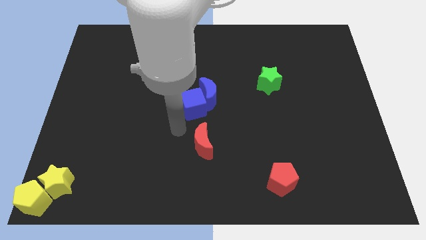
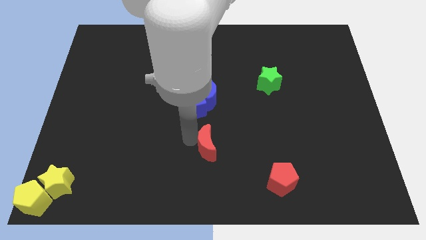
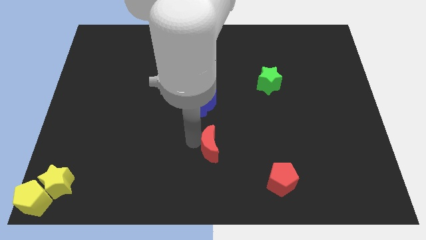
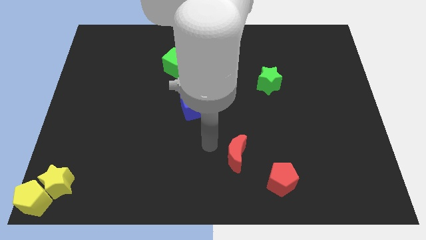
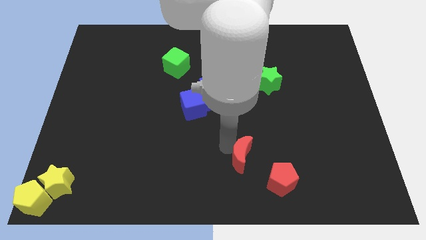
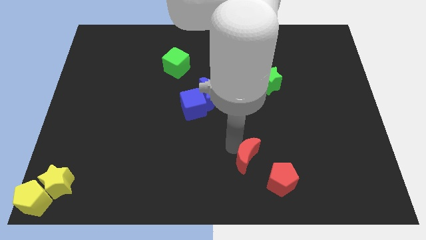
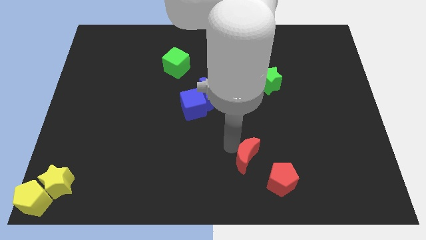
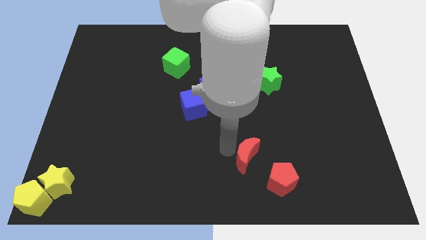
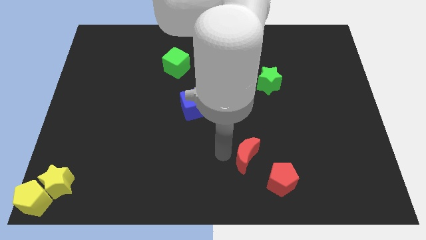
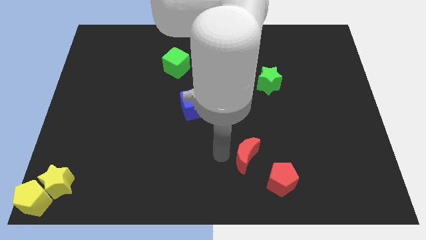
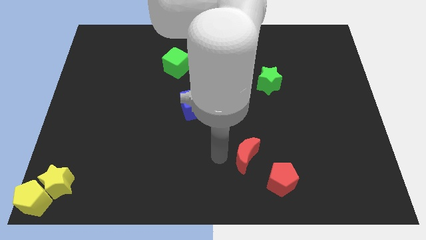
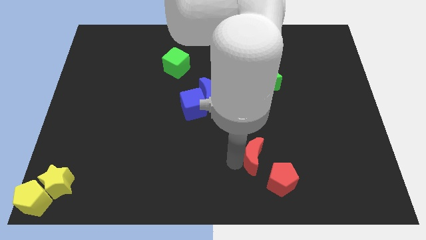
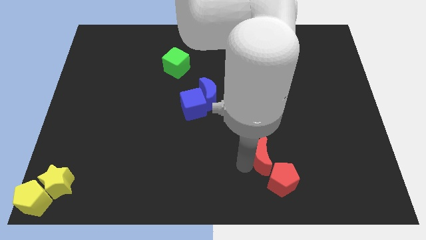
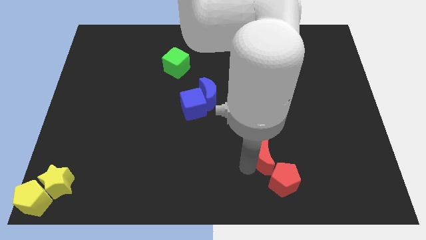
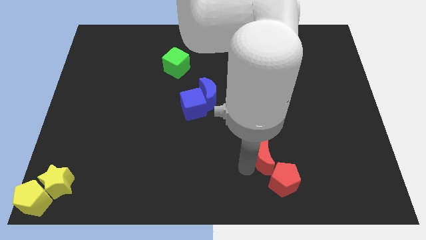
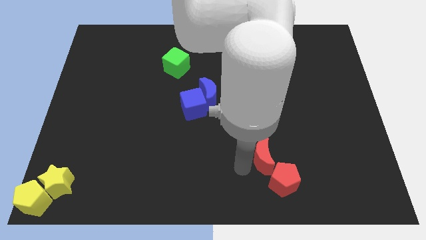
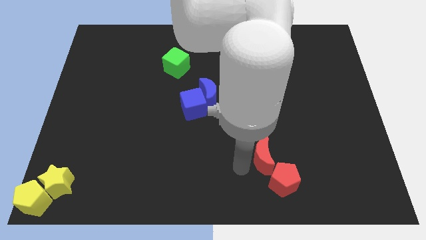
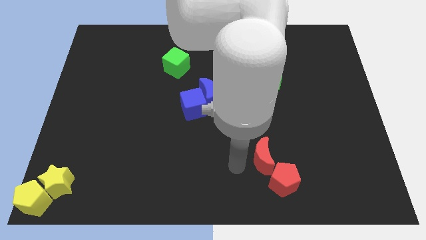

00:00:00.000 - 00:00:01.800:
push the red crescent into the red pentagon

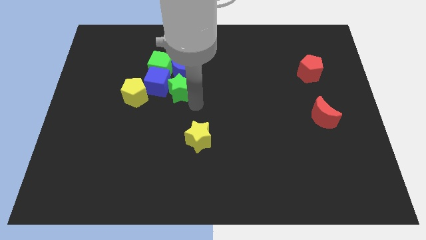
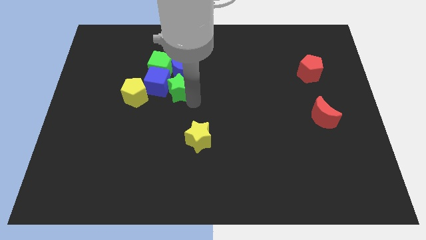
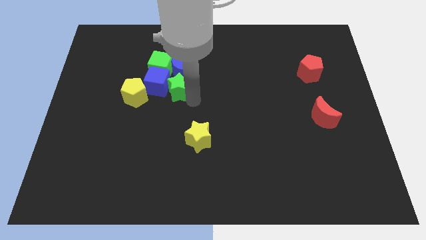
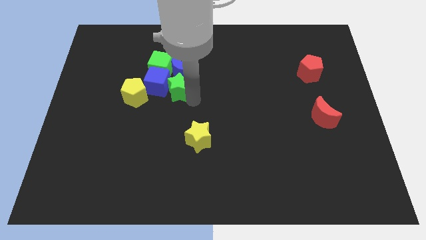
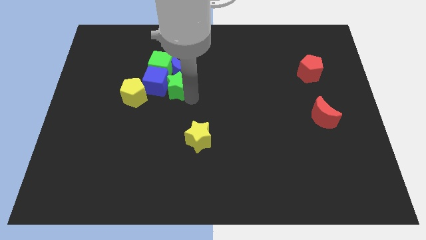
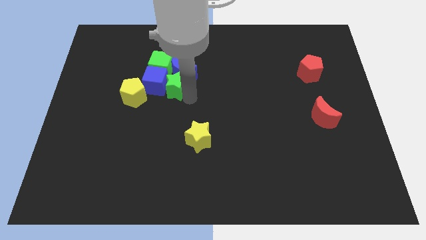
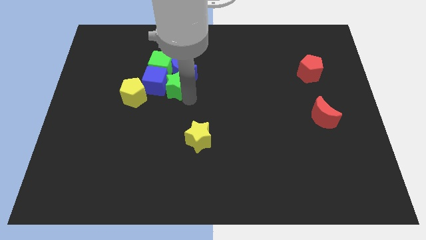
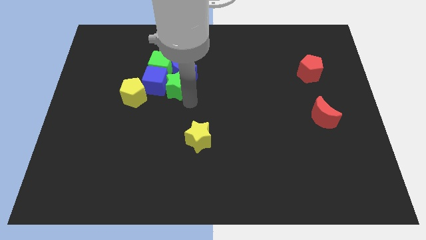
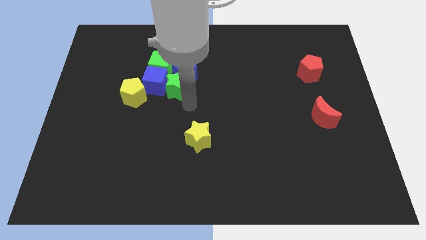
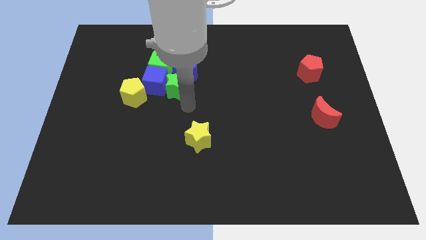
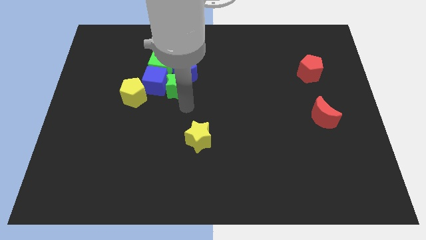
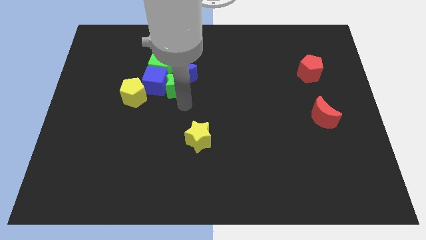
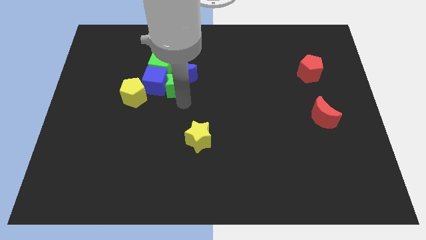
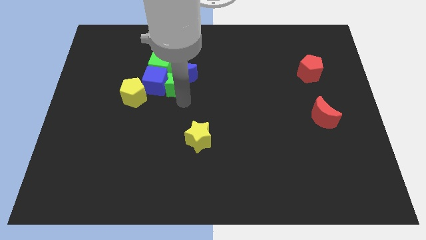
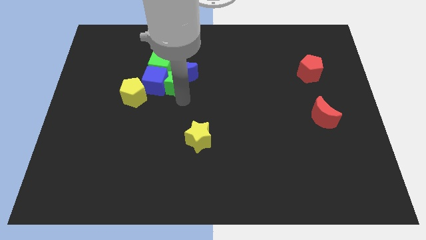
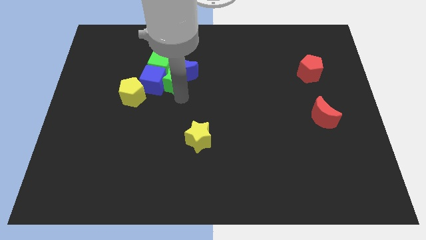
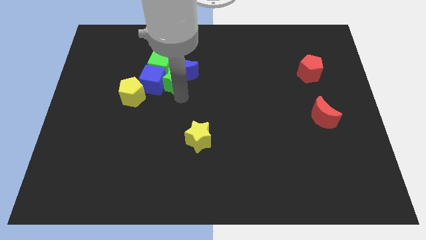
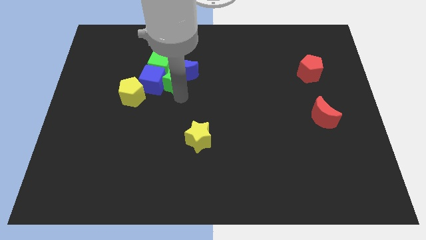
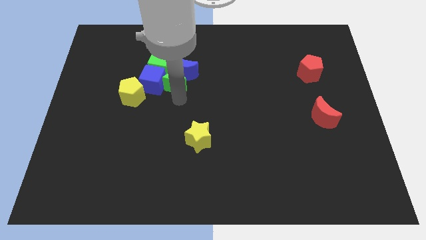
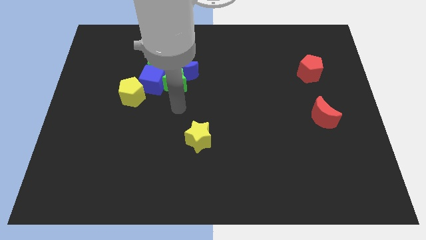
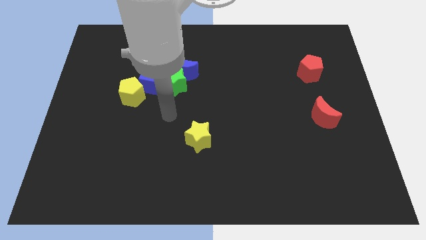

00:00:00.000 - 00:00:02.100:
push green star into green cube

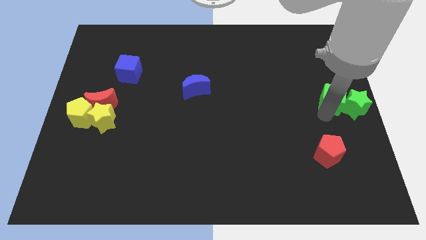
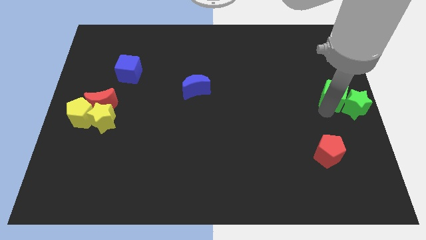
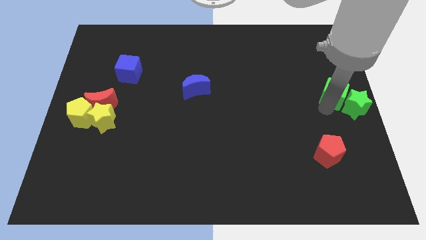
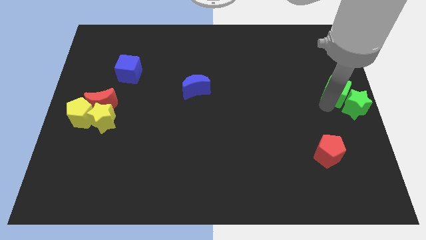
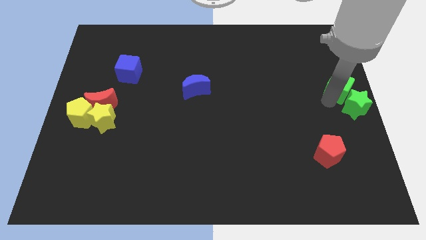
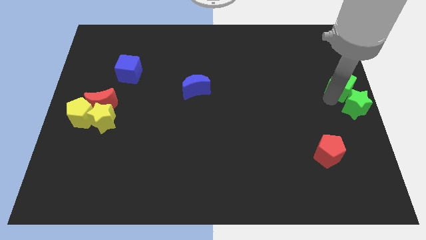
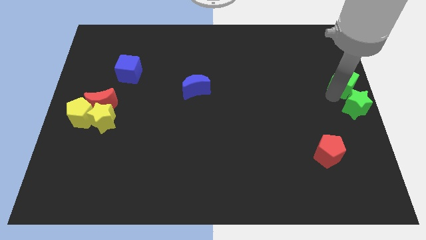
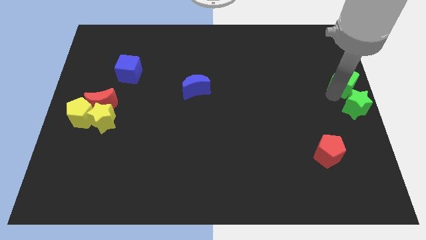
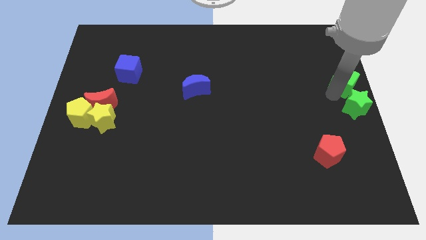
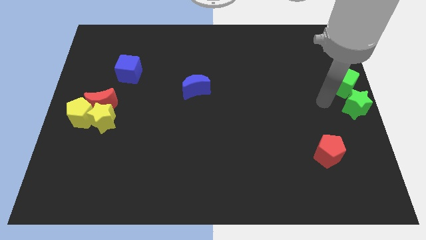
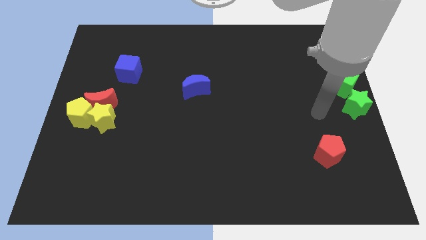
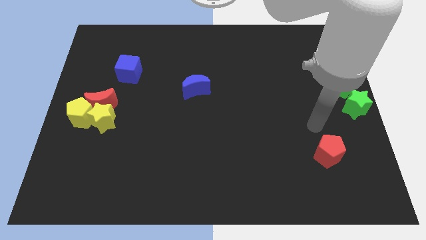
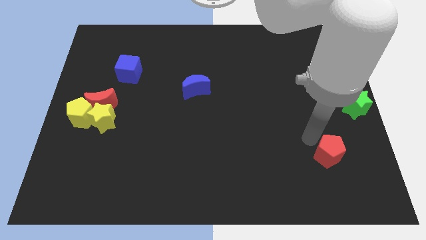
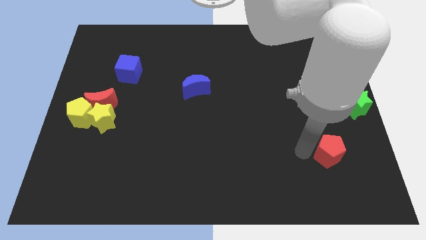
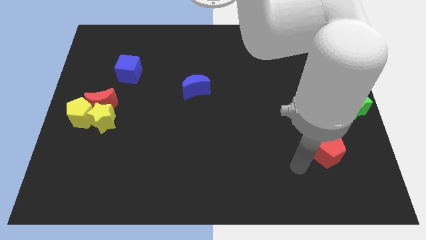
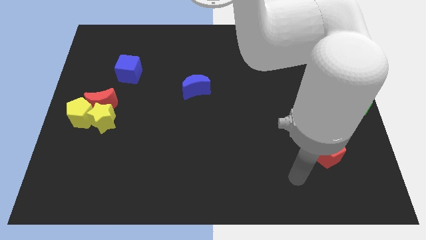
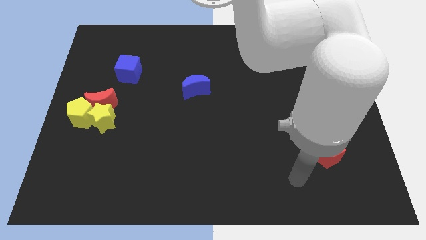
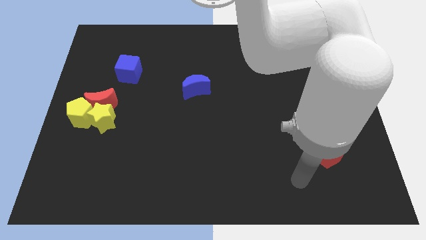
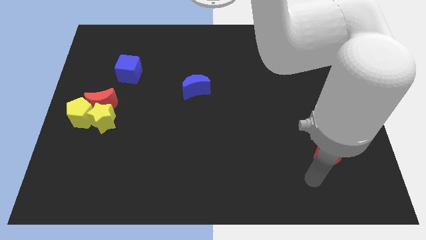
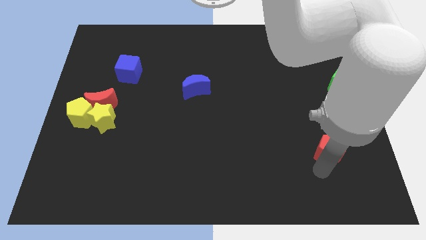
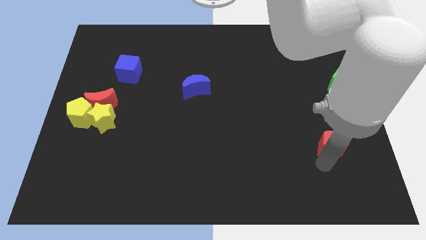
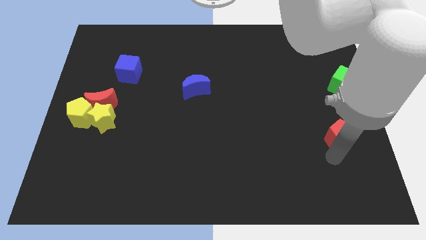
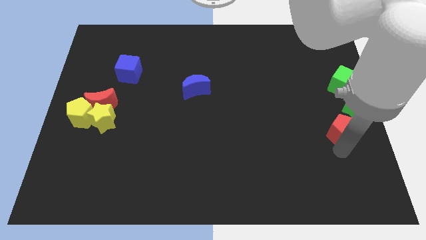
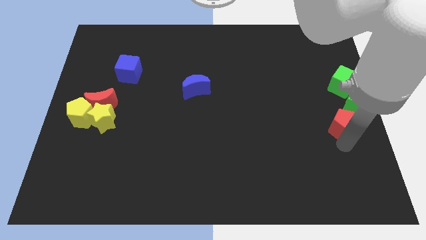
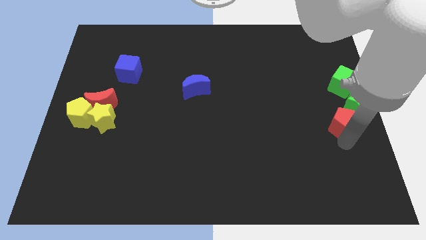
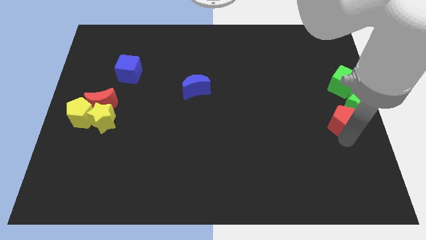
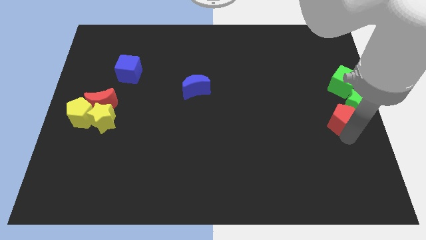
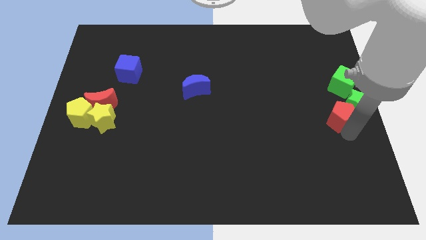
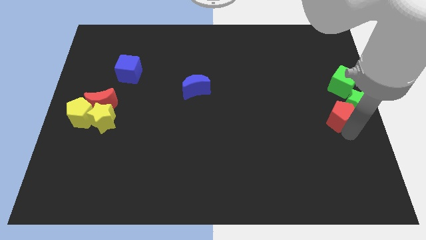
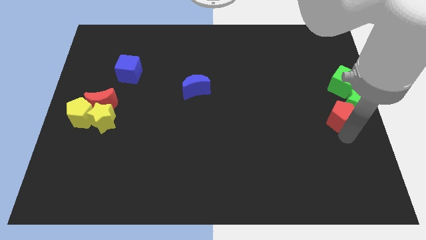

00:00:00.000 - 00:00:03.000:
push red pentagon towards green star

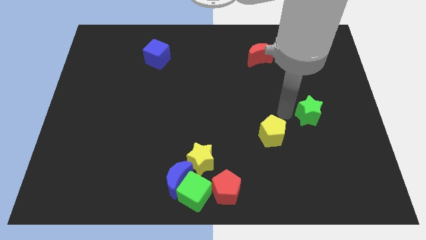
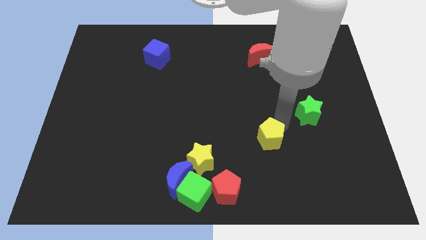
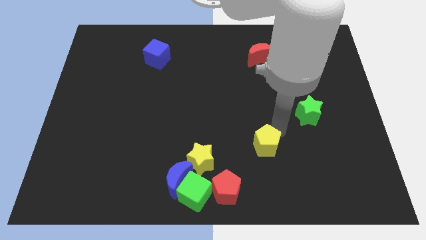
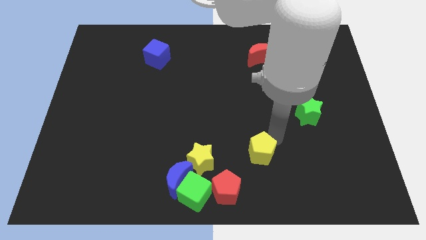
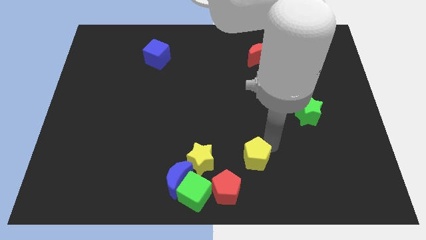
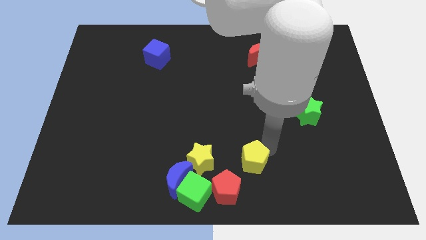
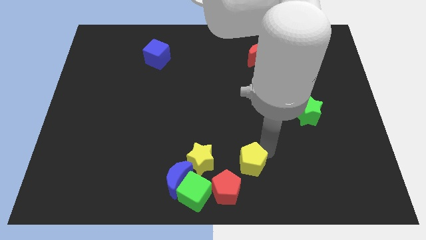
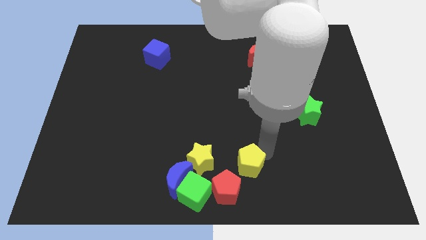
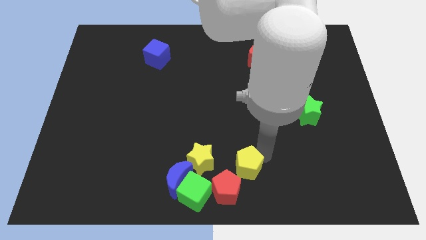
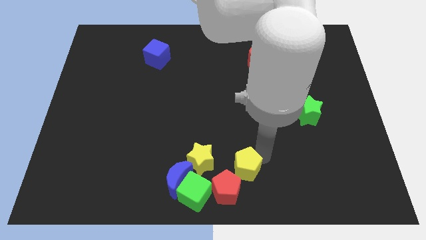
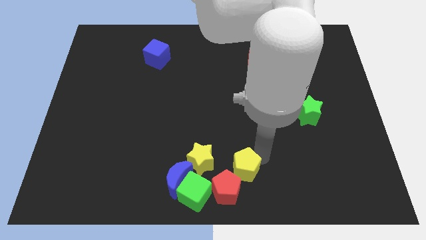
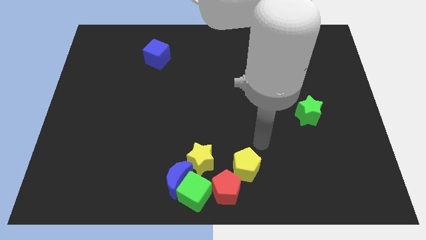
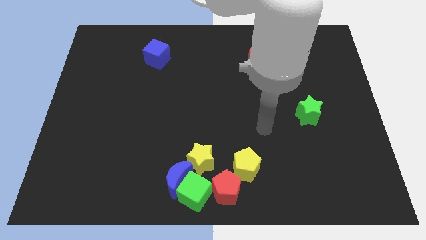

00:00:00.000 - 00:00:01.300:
move the yellow pentagon close to the red pentagon

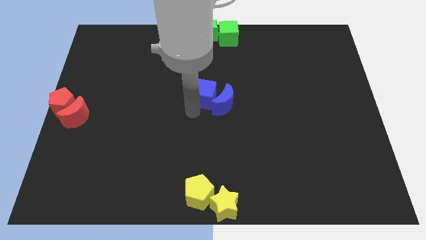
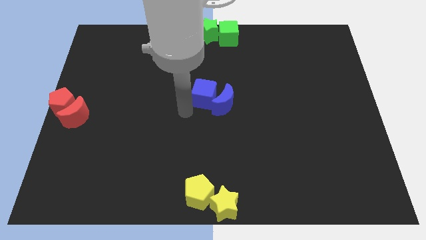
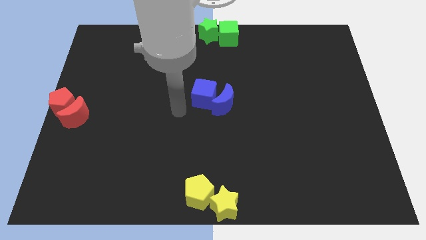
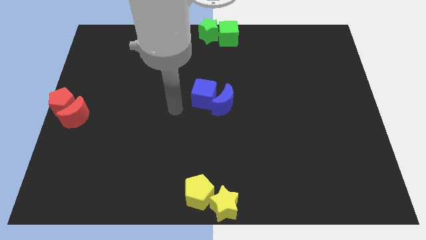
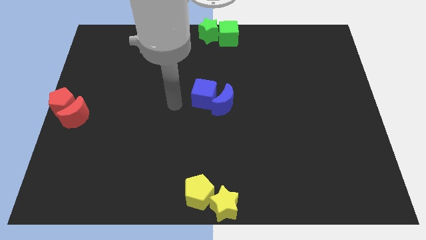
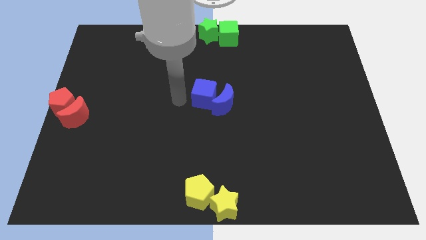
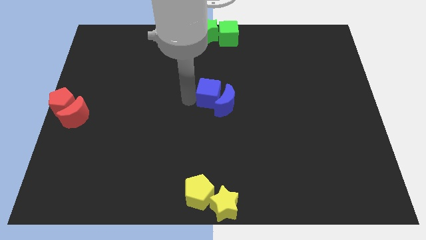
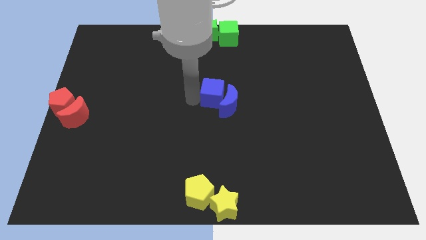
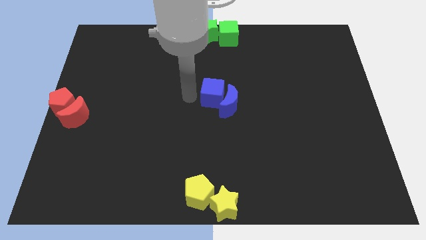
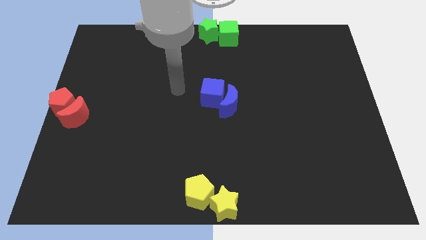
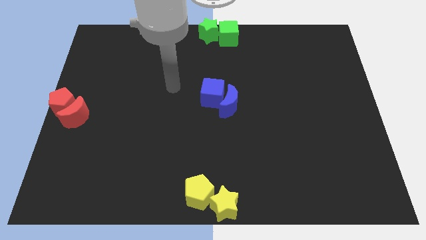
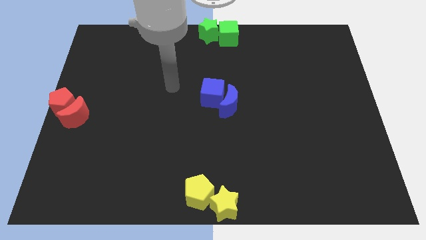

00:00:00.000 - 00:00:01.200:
place the blue cube and blue crescent to the center of the board
